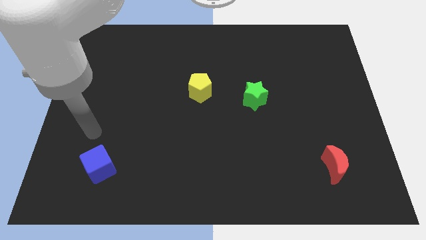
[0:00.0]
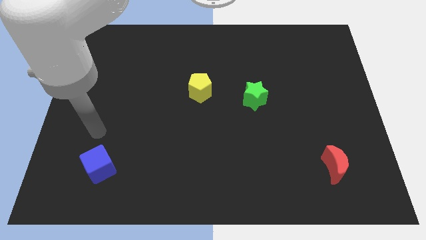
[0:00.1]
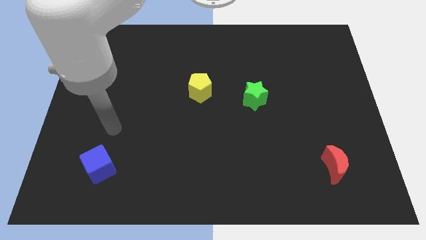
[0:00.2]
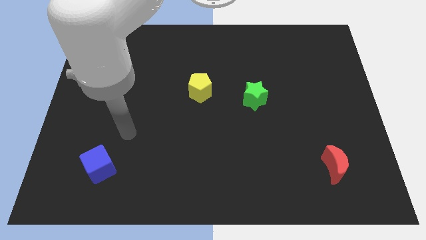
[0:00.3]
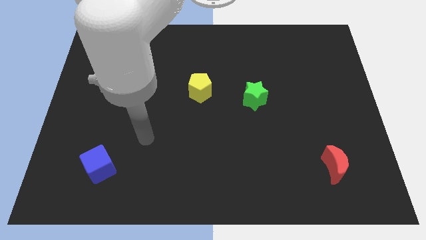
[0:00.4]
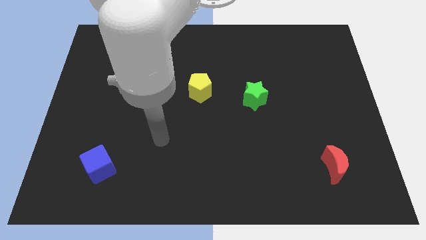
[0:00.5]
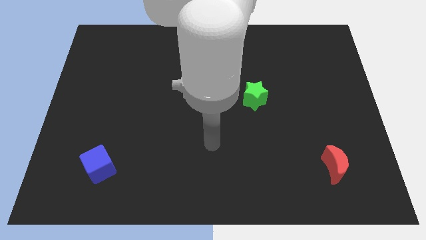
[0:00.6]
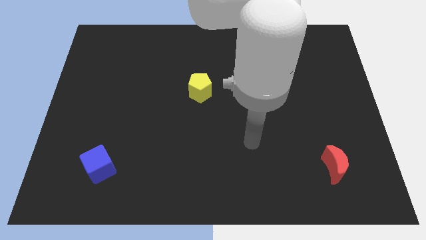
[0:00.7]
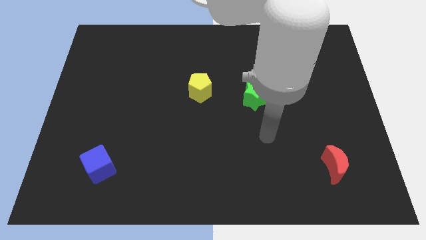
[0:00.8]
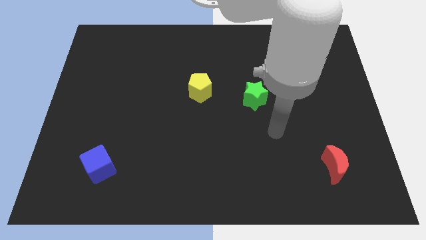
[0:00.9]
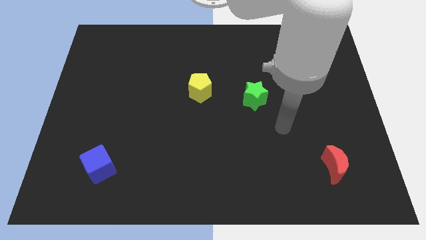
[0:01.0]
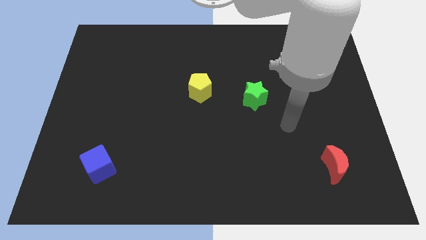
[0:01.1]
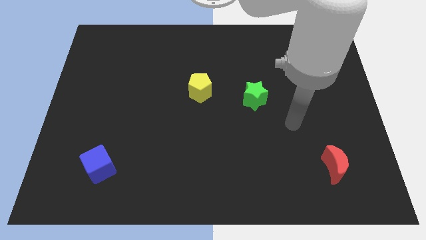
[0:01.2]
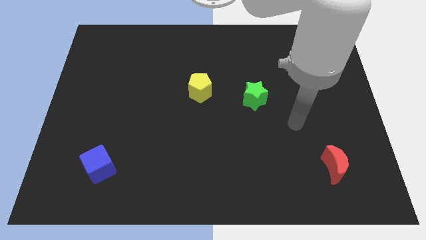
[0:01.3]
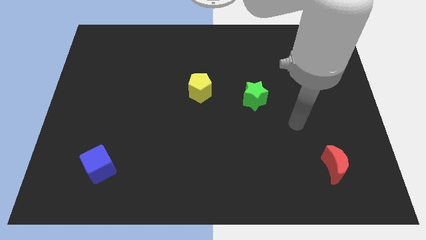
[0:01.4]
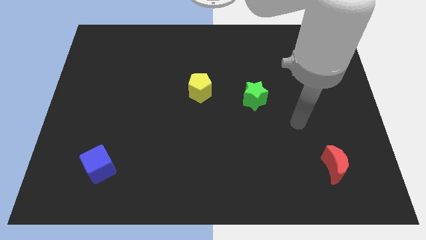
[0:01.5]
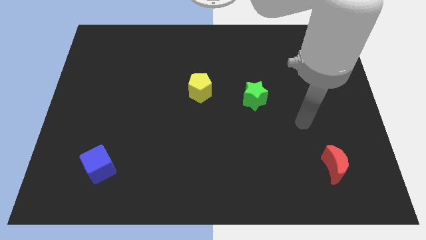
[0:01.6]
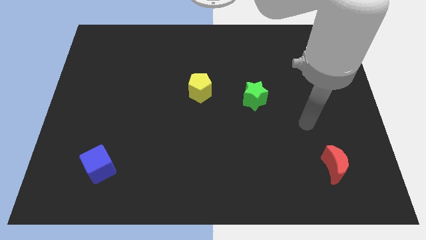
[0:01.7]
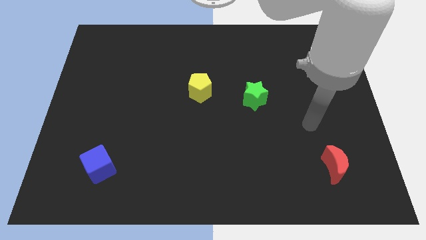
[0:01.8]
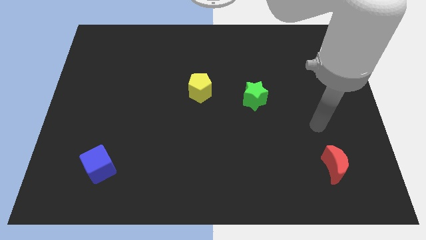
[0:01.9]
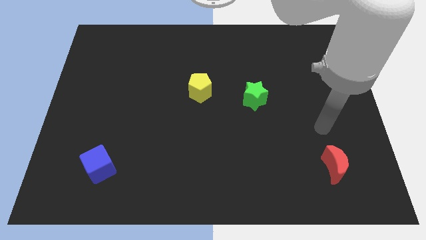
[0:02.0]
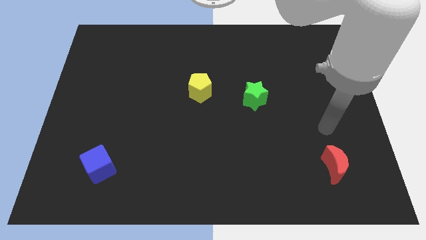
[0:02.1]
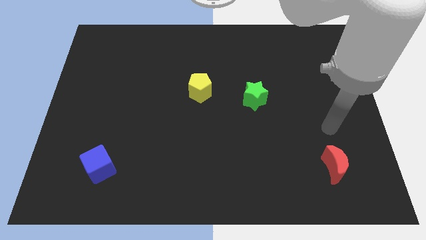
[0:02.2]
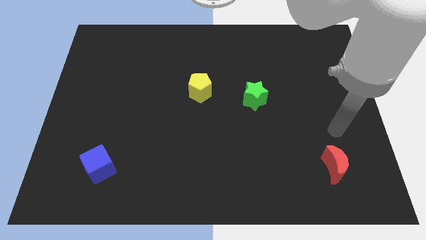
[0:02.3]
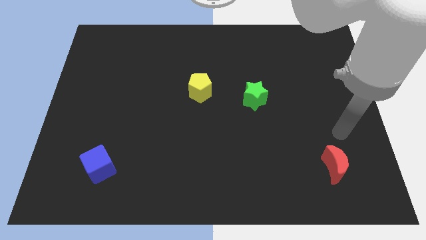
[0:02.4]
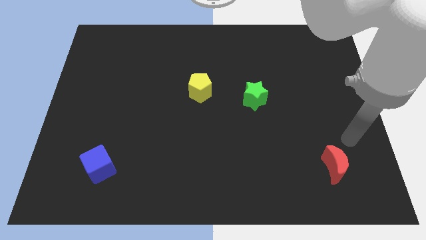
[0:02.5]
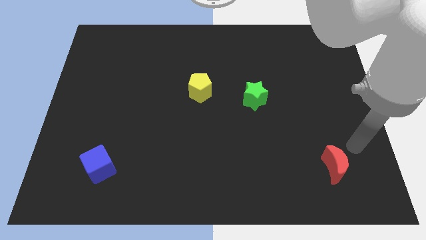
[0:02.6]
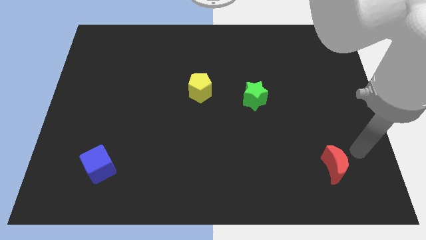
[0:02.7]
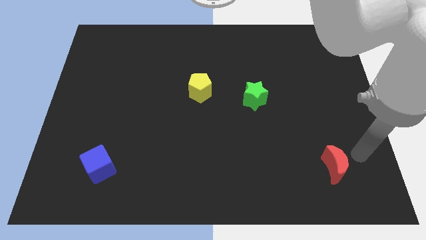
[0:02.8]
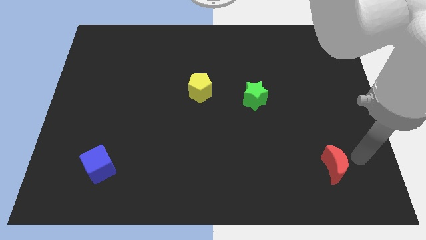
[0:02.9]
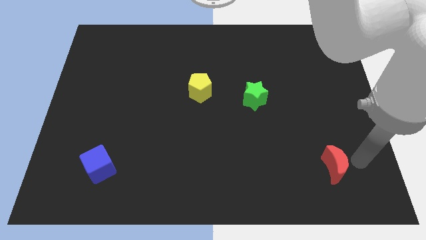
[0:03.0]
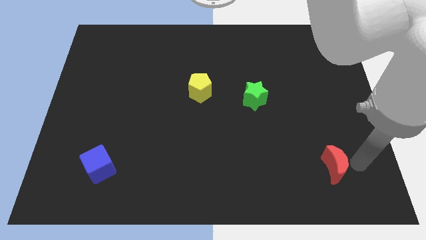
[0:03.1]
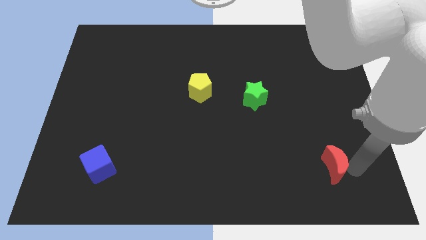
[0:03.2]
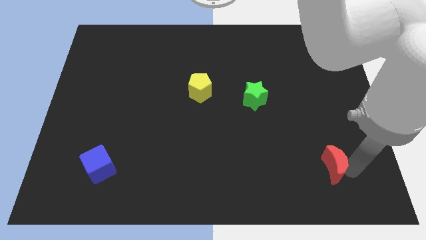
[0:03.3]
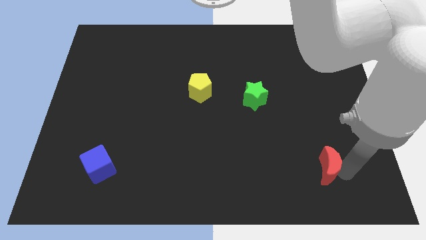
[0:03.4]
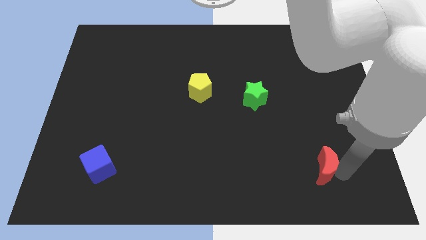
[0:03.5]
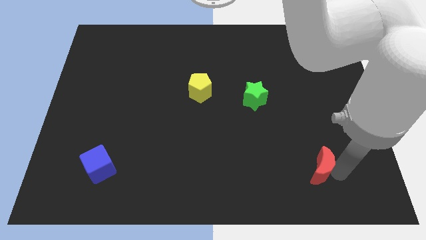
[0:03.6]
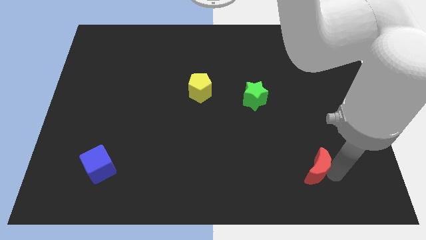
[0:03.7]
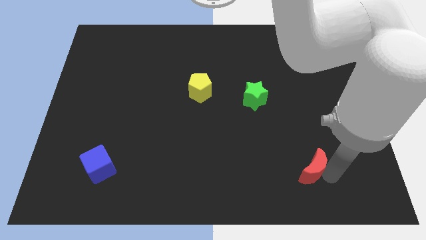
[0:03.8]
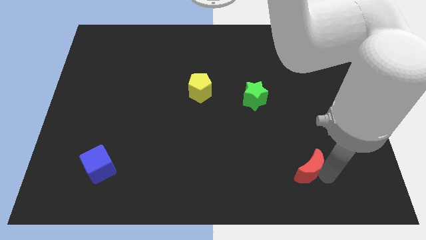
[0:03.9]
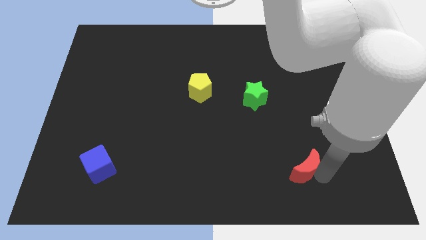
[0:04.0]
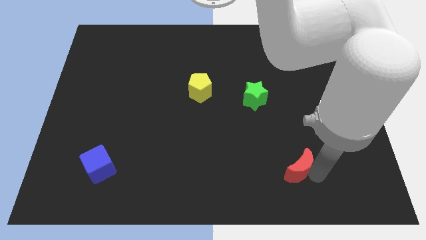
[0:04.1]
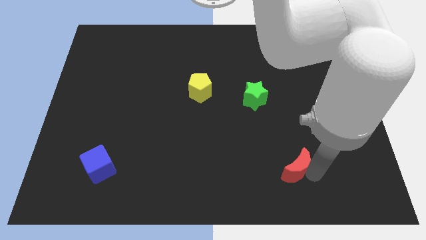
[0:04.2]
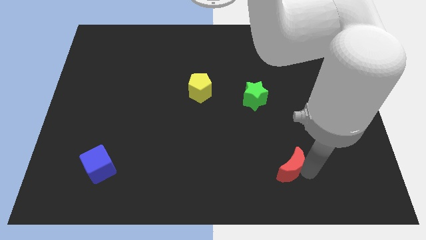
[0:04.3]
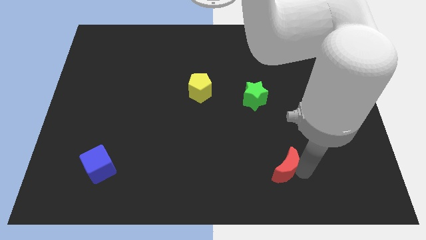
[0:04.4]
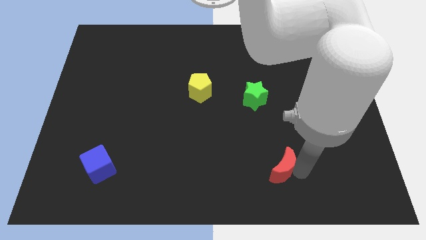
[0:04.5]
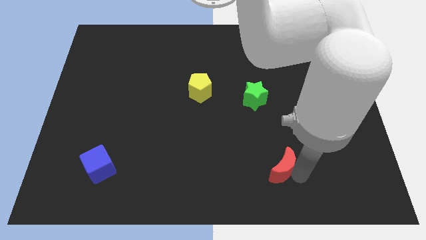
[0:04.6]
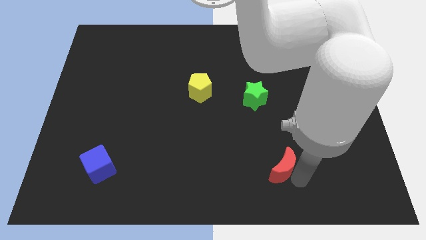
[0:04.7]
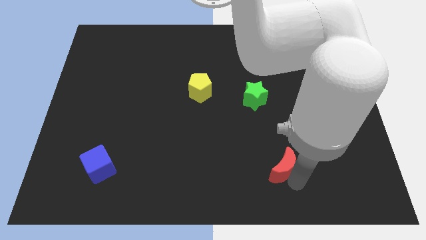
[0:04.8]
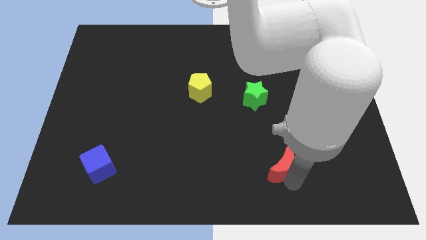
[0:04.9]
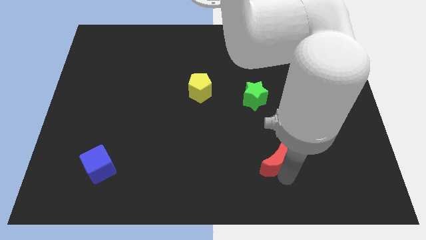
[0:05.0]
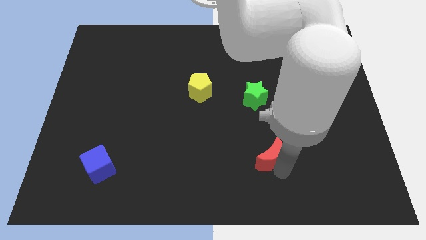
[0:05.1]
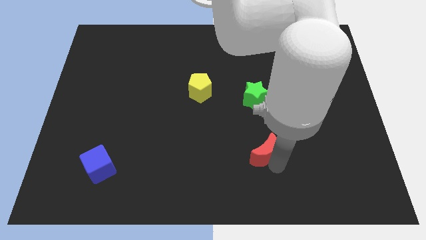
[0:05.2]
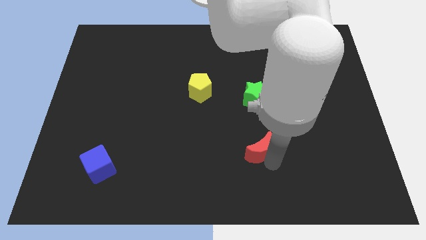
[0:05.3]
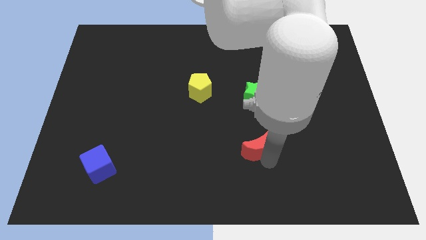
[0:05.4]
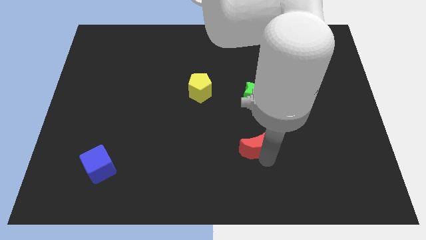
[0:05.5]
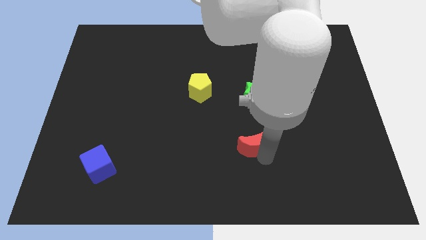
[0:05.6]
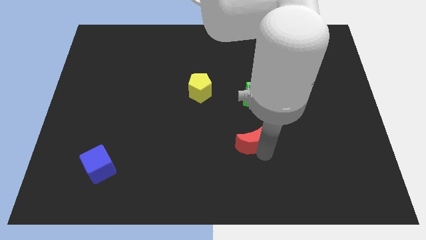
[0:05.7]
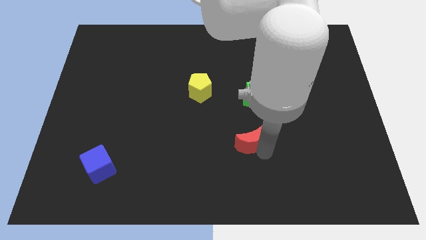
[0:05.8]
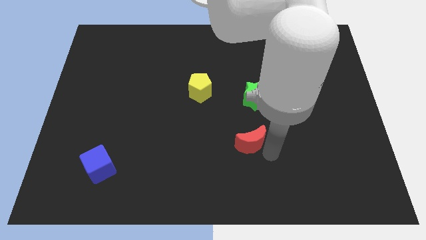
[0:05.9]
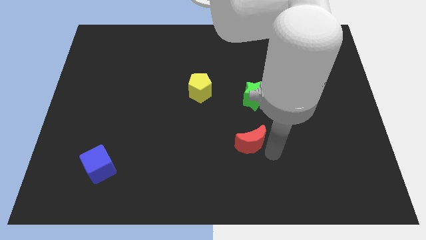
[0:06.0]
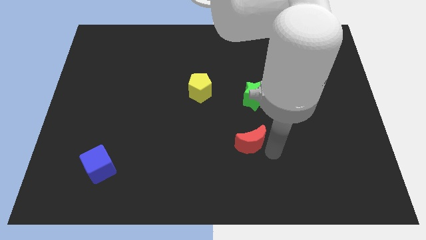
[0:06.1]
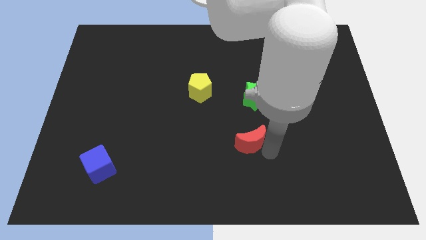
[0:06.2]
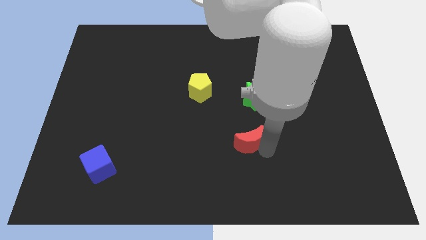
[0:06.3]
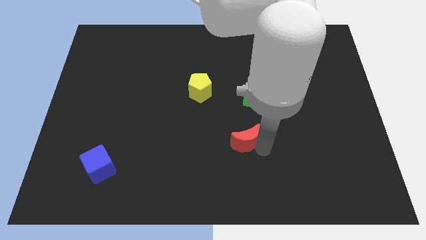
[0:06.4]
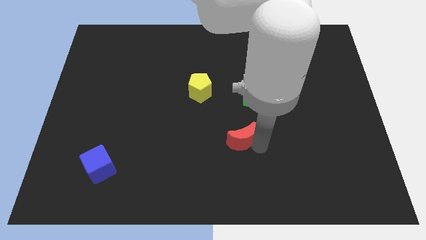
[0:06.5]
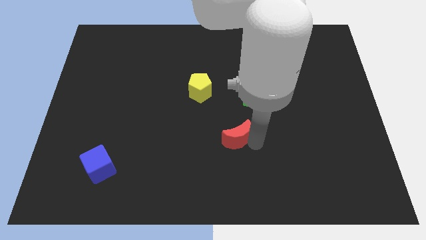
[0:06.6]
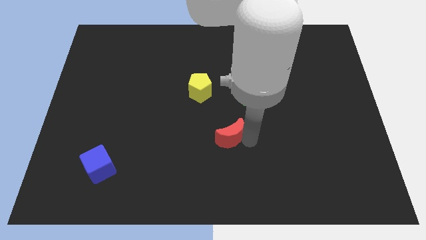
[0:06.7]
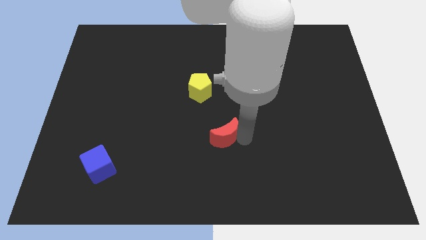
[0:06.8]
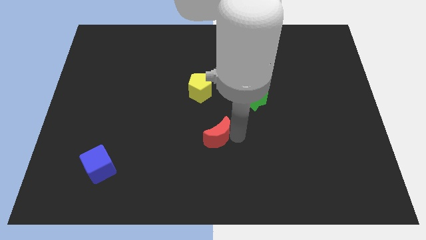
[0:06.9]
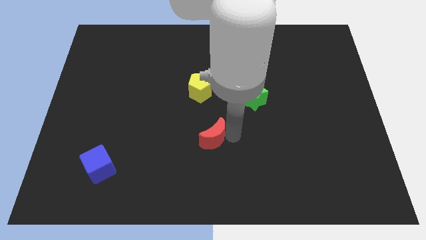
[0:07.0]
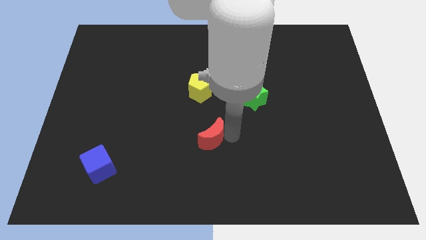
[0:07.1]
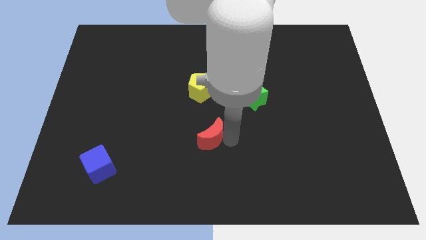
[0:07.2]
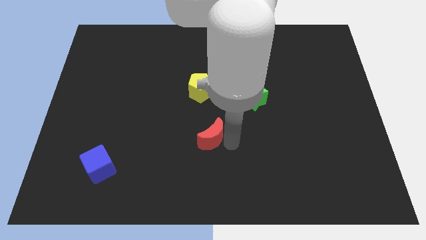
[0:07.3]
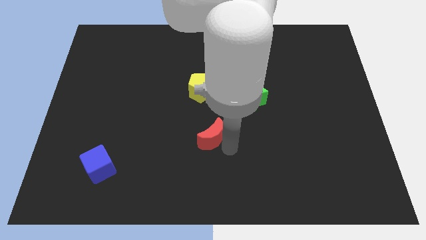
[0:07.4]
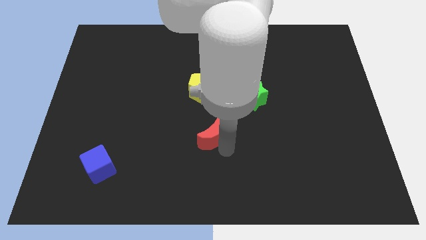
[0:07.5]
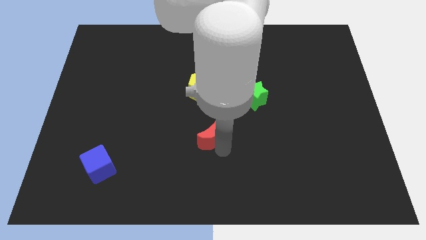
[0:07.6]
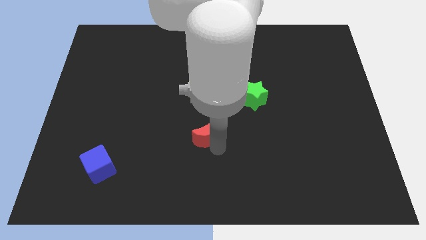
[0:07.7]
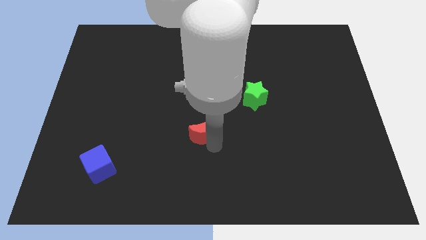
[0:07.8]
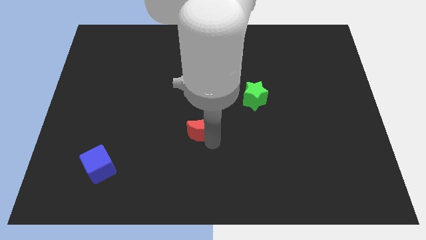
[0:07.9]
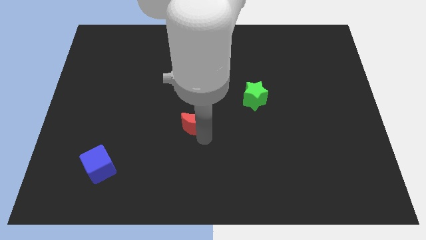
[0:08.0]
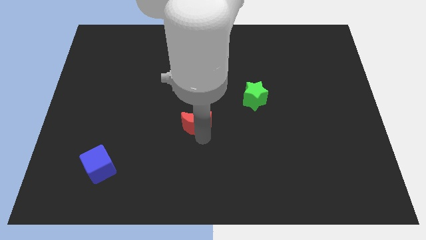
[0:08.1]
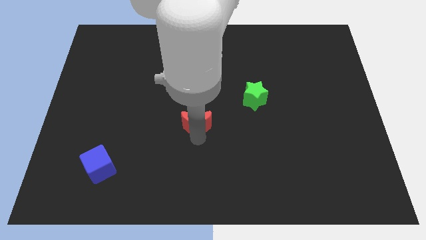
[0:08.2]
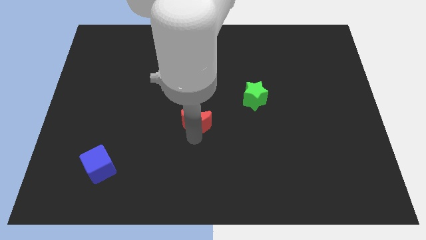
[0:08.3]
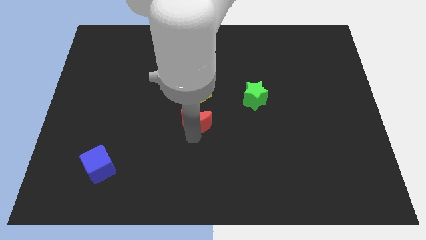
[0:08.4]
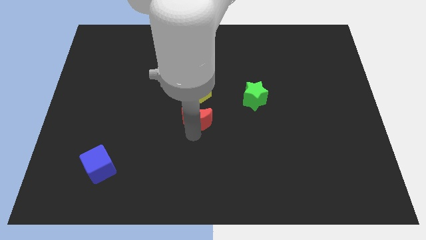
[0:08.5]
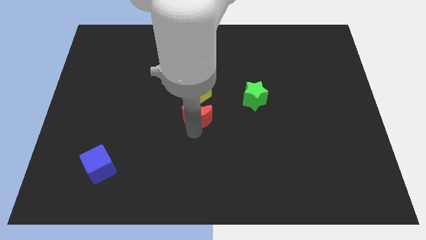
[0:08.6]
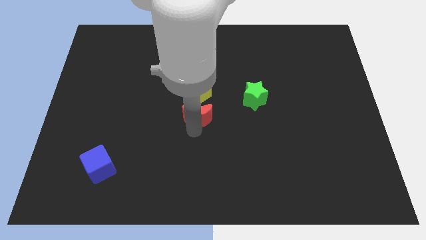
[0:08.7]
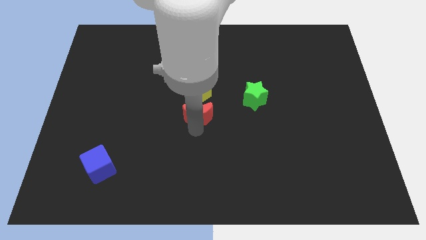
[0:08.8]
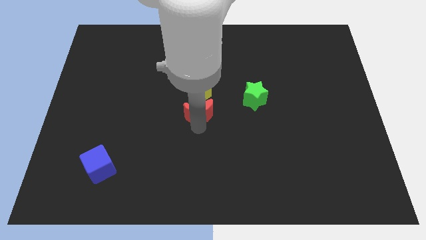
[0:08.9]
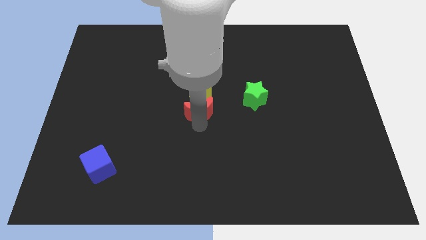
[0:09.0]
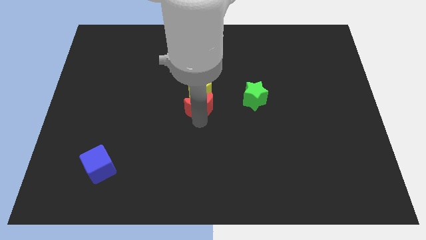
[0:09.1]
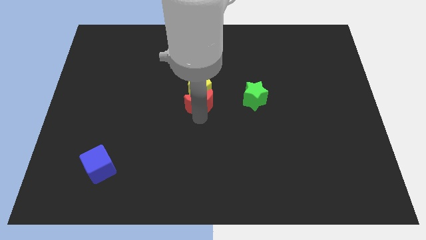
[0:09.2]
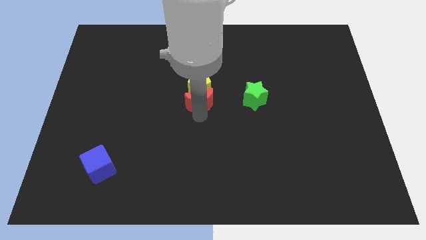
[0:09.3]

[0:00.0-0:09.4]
slide the red block towards the yellow block
